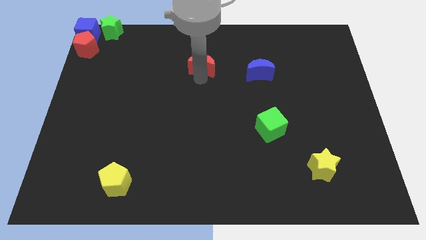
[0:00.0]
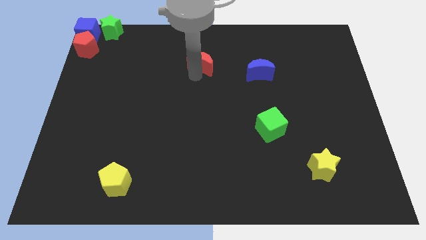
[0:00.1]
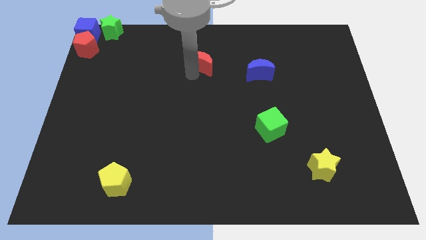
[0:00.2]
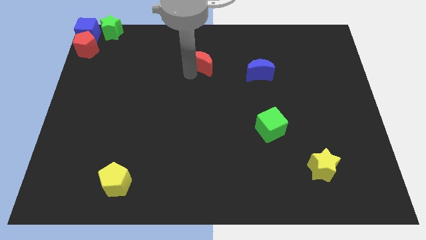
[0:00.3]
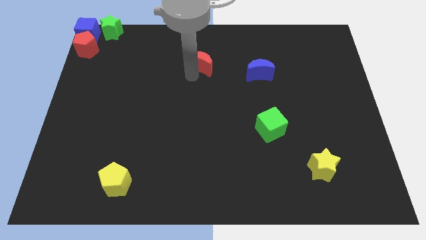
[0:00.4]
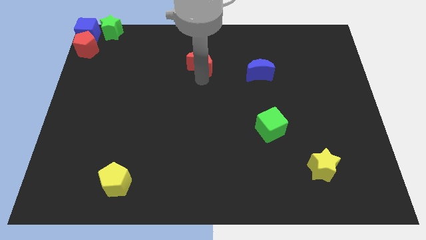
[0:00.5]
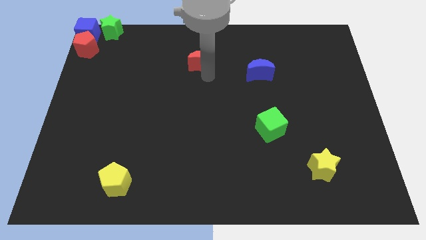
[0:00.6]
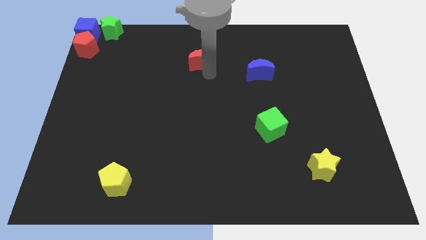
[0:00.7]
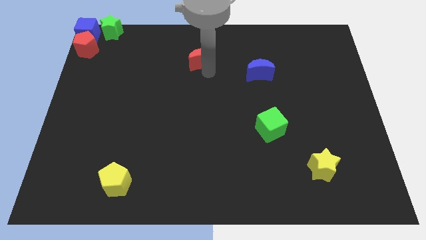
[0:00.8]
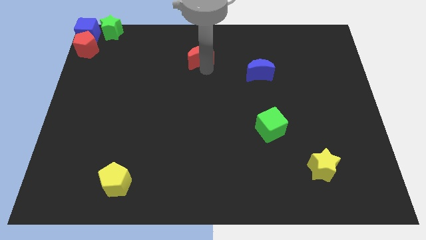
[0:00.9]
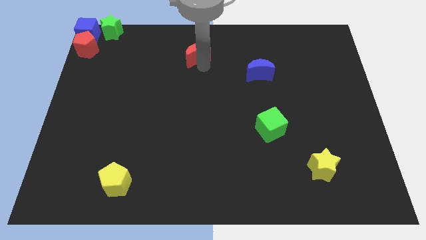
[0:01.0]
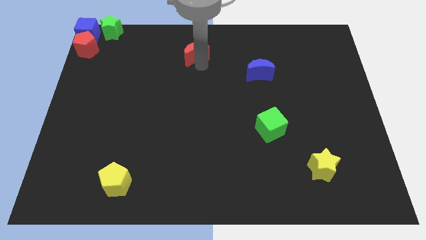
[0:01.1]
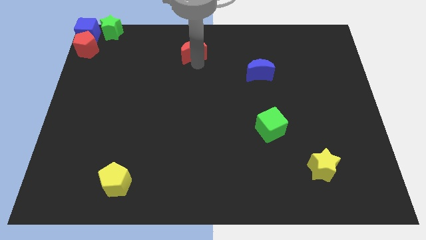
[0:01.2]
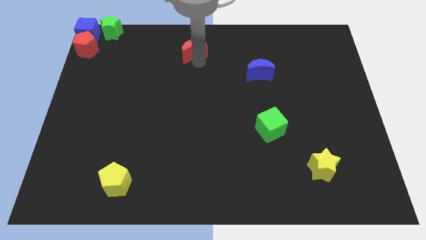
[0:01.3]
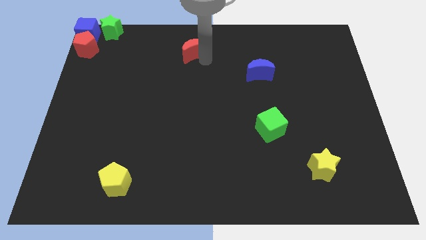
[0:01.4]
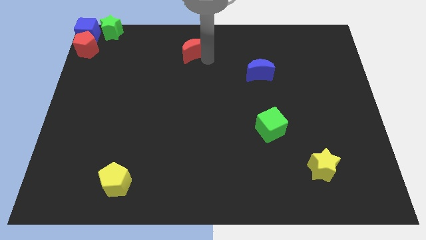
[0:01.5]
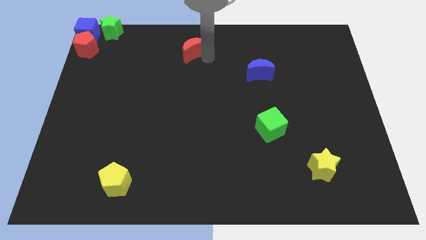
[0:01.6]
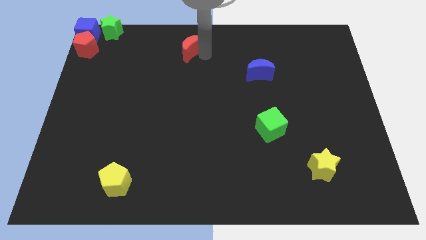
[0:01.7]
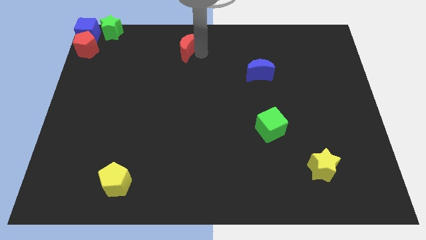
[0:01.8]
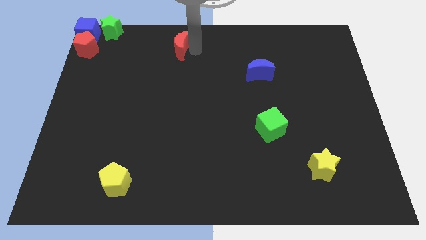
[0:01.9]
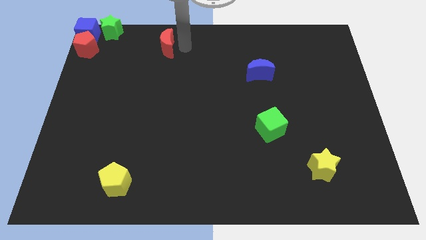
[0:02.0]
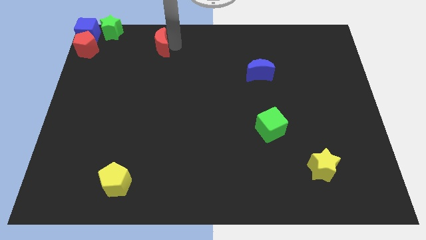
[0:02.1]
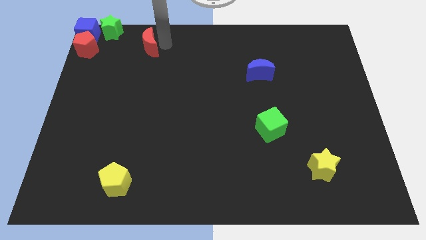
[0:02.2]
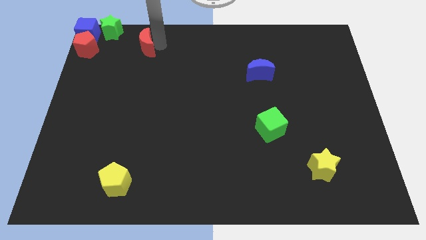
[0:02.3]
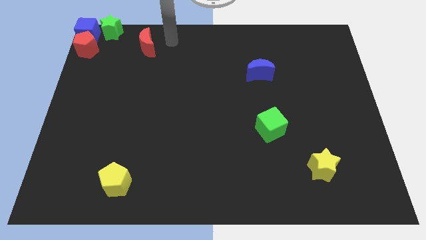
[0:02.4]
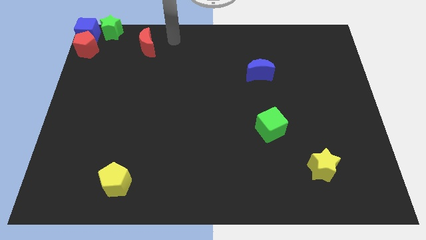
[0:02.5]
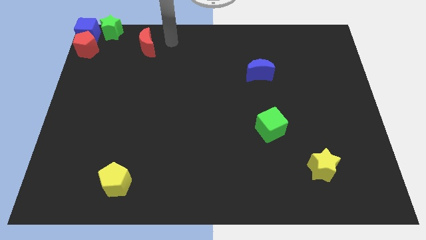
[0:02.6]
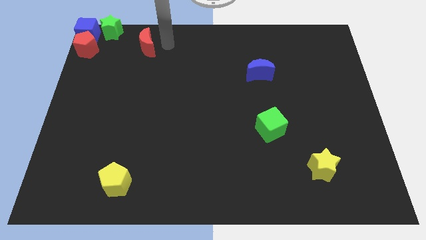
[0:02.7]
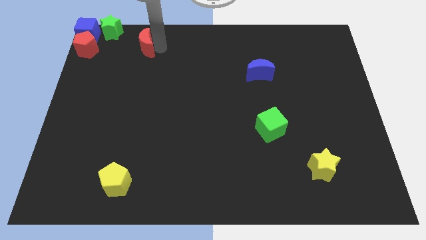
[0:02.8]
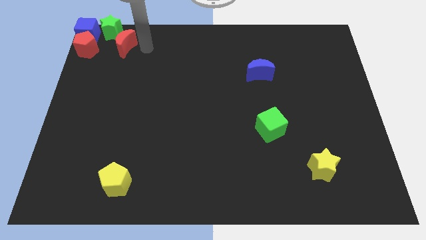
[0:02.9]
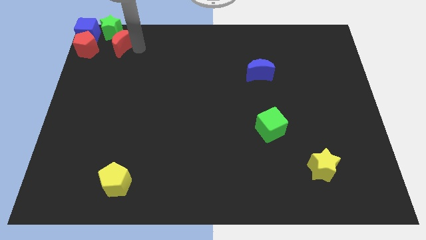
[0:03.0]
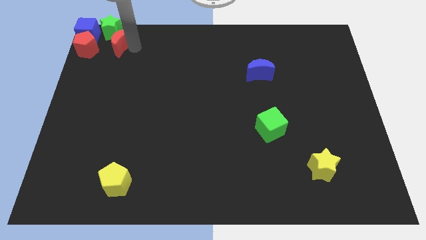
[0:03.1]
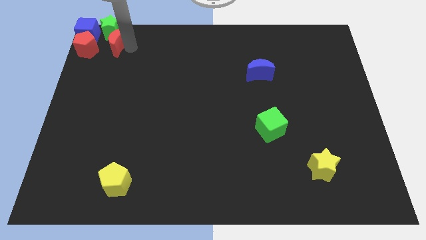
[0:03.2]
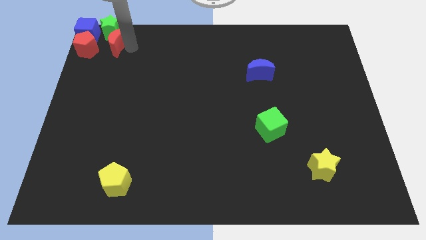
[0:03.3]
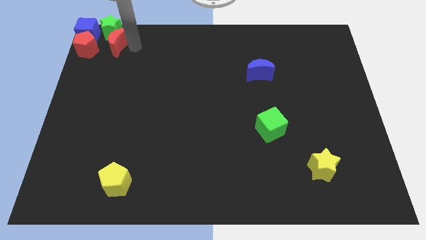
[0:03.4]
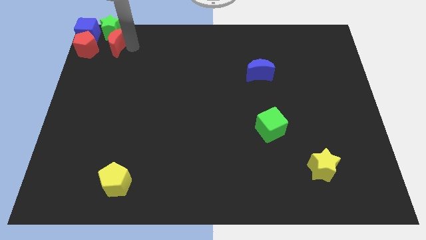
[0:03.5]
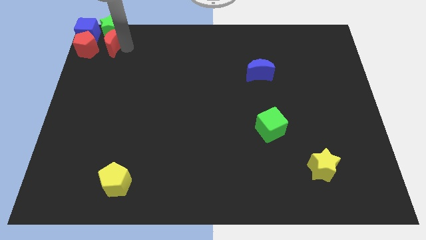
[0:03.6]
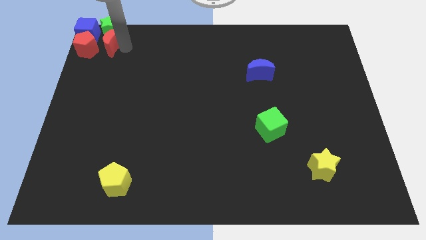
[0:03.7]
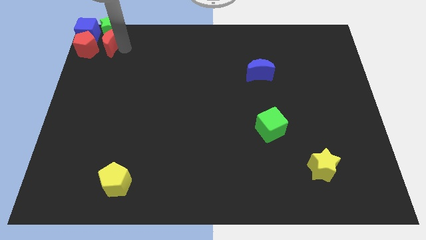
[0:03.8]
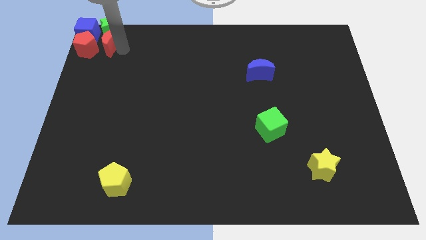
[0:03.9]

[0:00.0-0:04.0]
put the red crescent parallel right to the red pentagon

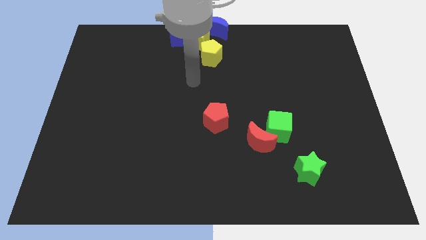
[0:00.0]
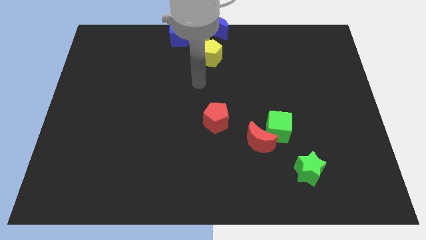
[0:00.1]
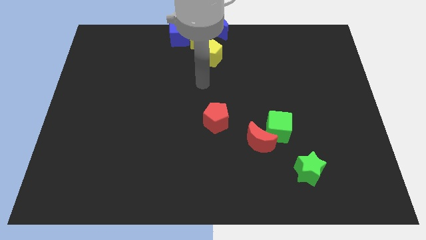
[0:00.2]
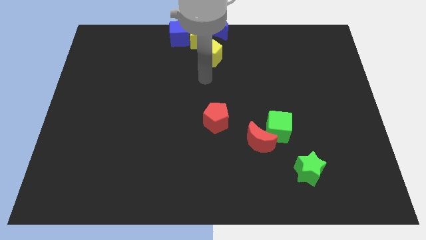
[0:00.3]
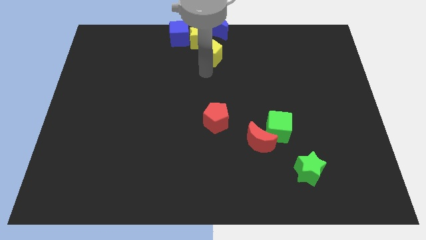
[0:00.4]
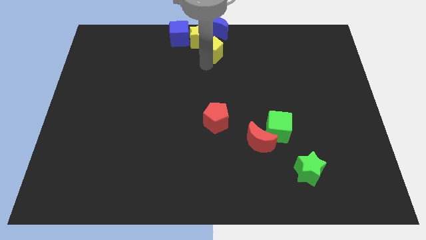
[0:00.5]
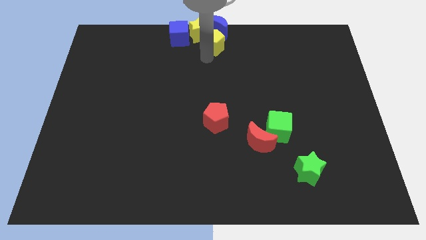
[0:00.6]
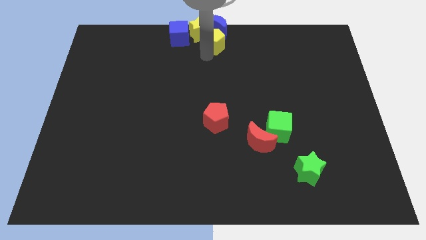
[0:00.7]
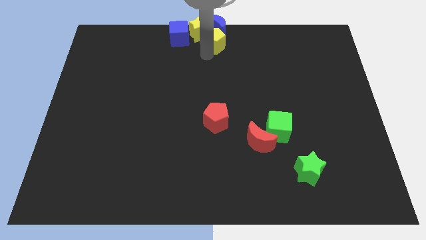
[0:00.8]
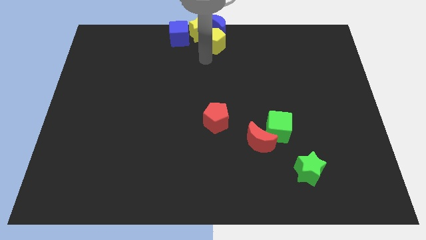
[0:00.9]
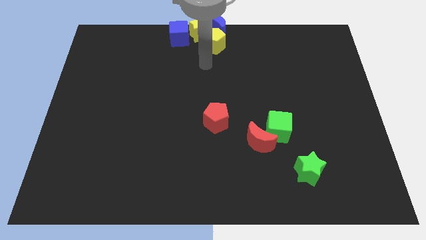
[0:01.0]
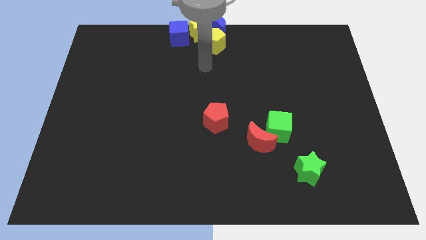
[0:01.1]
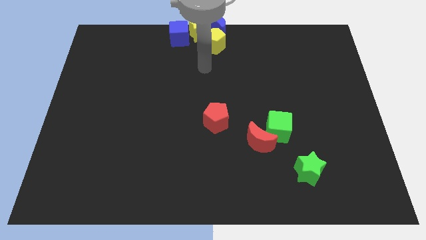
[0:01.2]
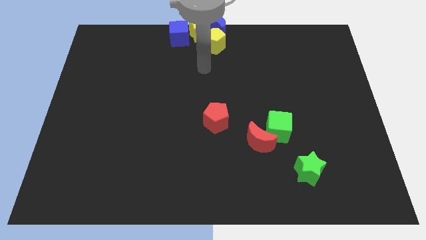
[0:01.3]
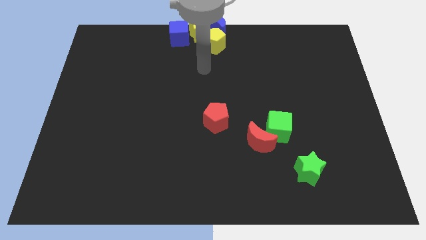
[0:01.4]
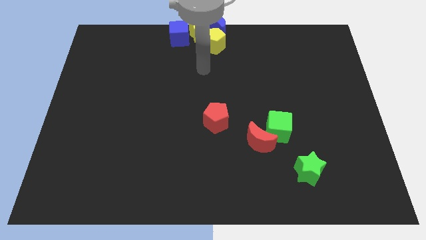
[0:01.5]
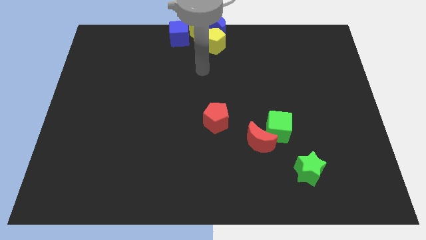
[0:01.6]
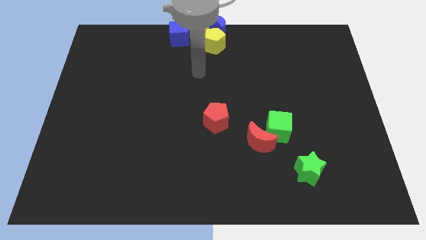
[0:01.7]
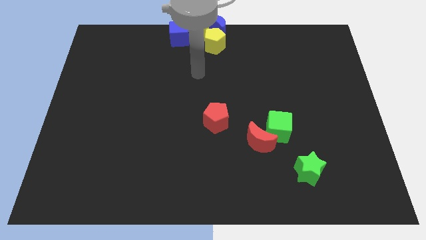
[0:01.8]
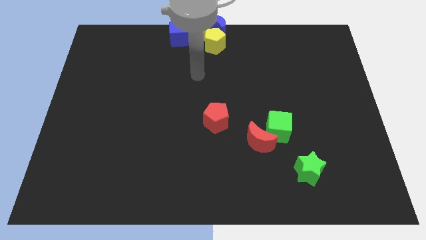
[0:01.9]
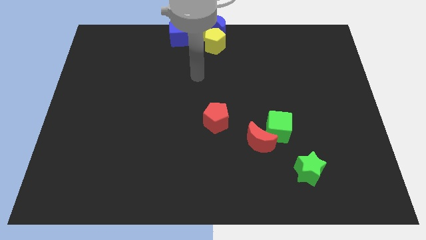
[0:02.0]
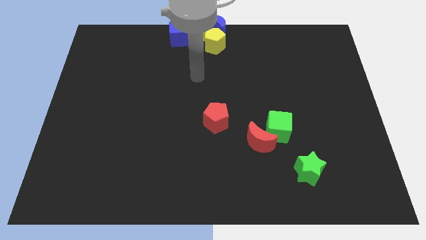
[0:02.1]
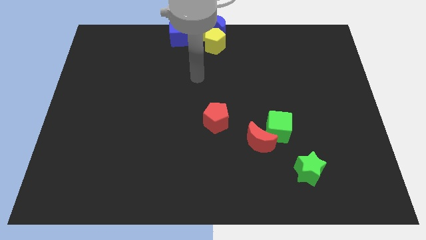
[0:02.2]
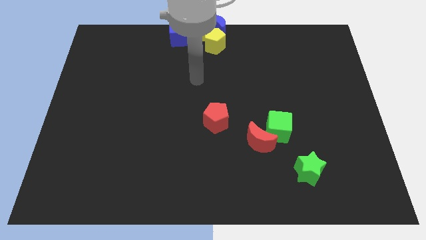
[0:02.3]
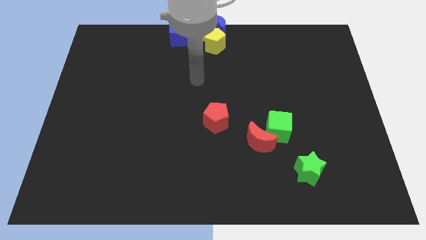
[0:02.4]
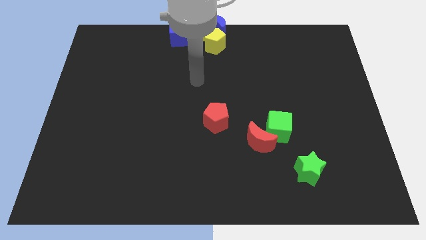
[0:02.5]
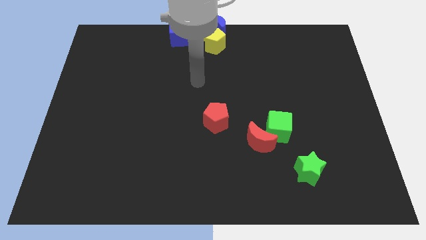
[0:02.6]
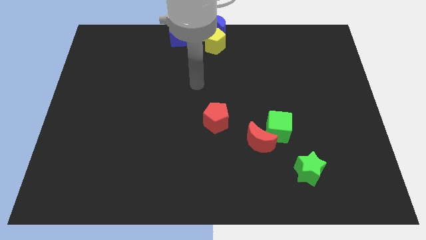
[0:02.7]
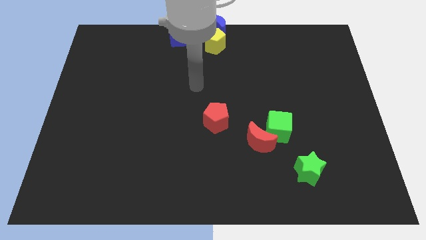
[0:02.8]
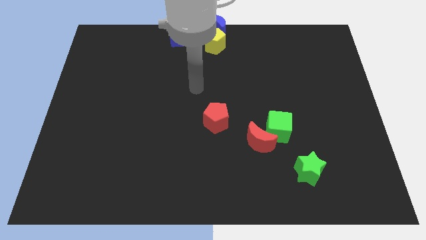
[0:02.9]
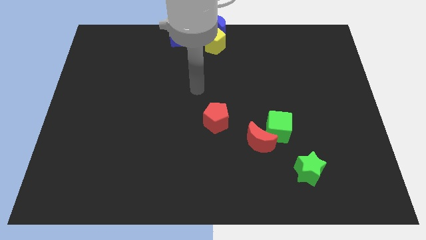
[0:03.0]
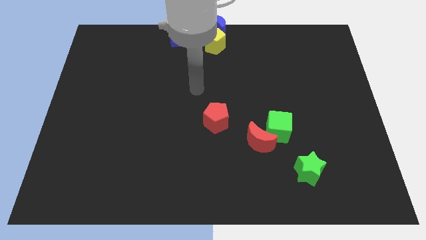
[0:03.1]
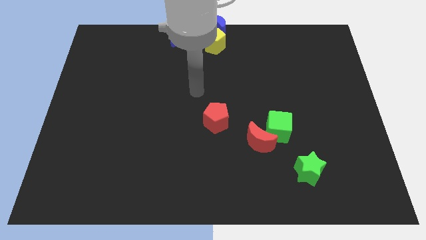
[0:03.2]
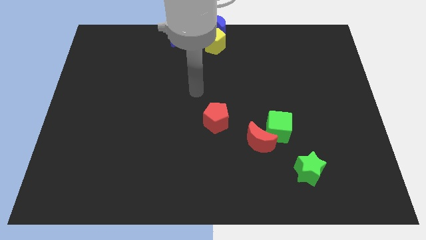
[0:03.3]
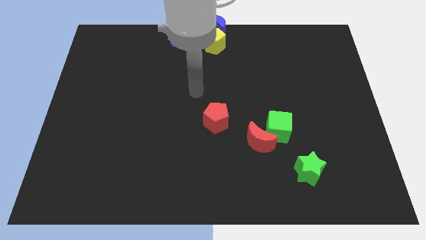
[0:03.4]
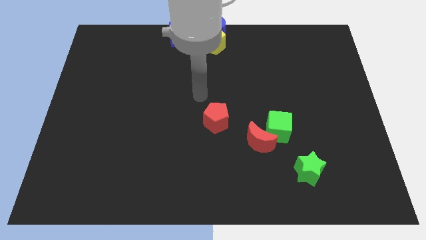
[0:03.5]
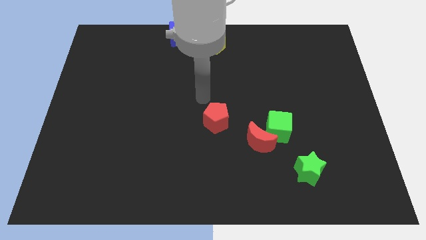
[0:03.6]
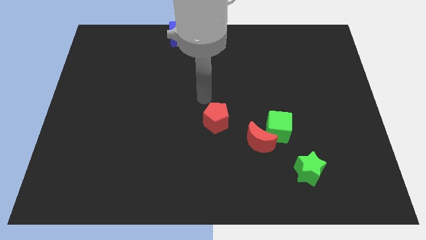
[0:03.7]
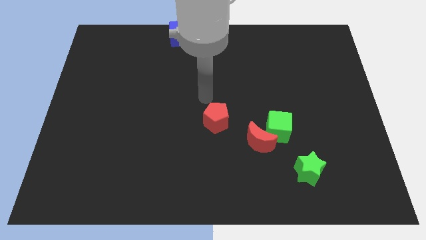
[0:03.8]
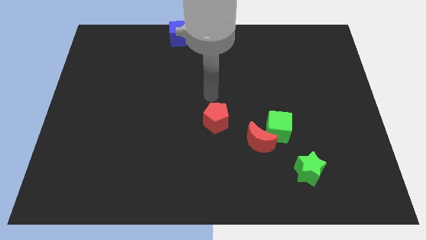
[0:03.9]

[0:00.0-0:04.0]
push arm on the top of the red pentagon

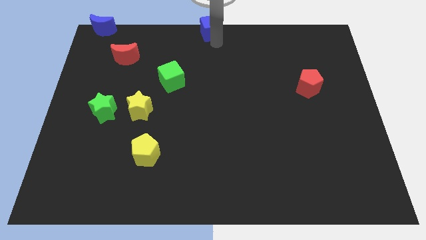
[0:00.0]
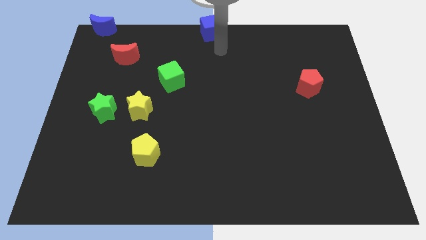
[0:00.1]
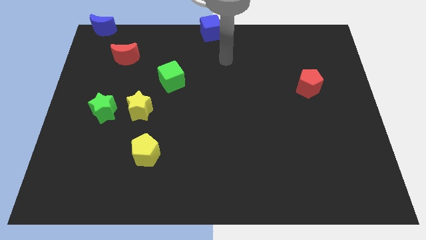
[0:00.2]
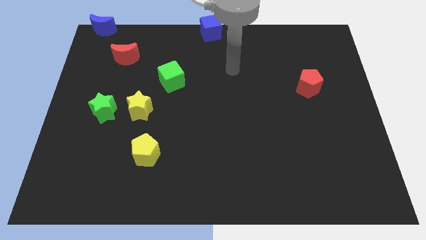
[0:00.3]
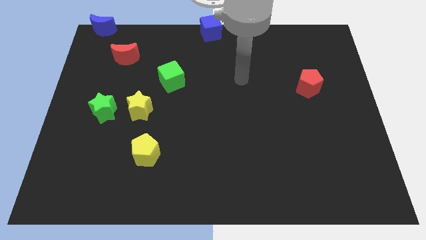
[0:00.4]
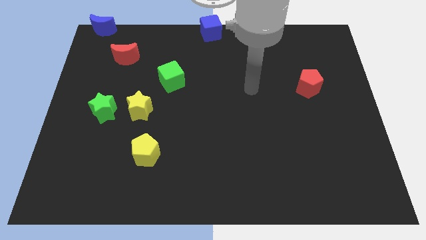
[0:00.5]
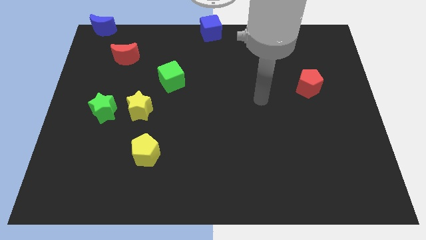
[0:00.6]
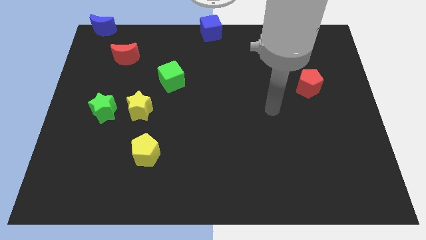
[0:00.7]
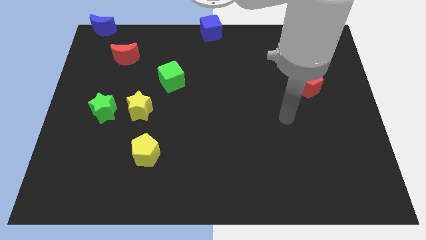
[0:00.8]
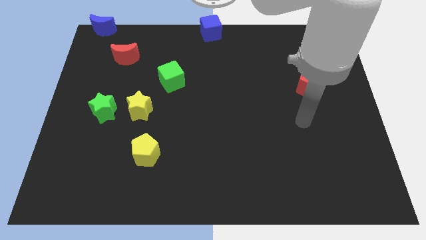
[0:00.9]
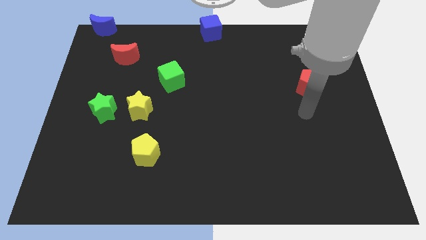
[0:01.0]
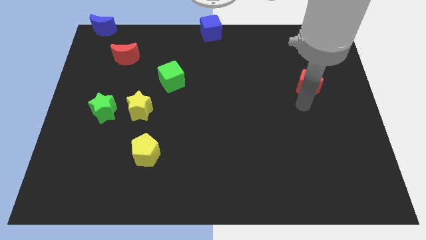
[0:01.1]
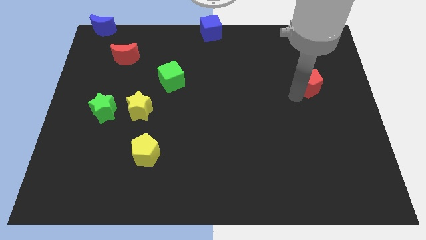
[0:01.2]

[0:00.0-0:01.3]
move your arm towards the bottom of the red pentagon
